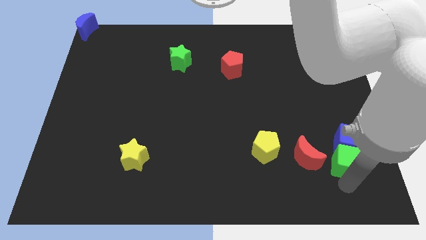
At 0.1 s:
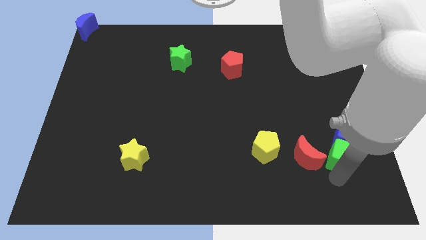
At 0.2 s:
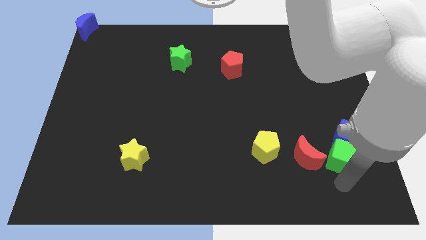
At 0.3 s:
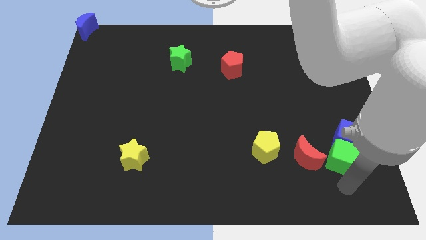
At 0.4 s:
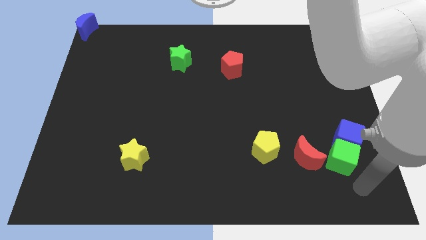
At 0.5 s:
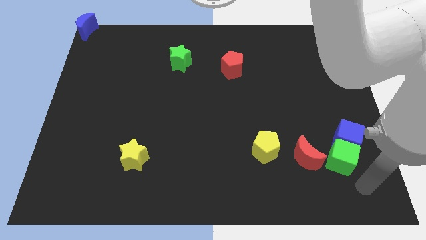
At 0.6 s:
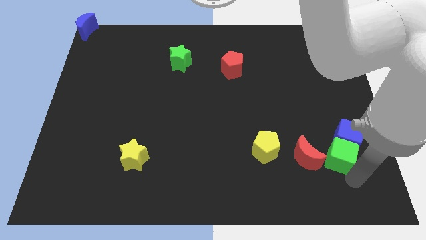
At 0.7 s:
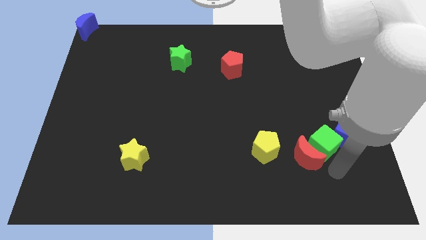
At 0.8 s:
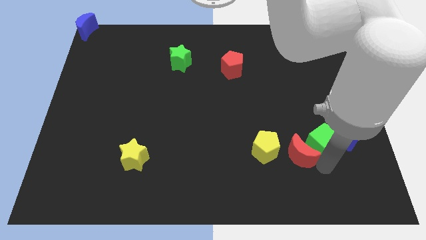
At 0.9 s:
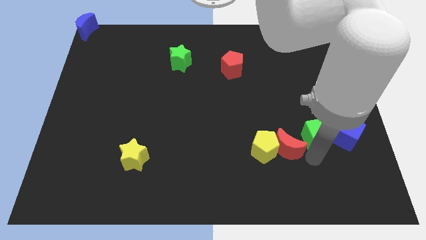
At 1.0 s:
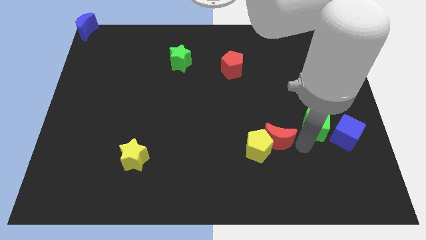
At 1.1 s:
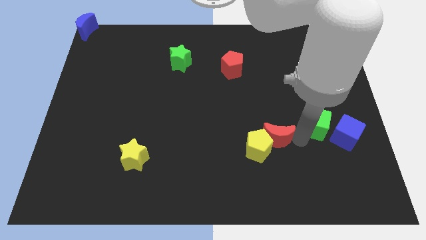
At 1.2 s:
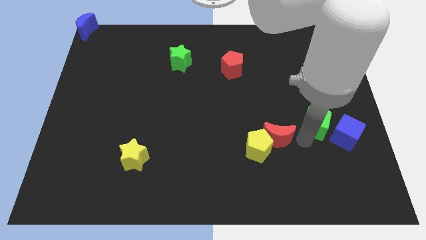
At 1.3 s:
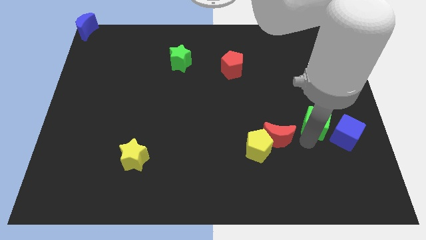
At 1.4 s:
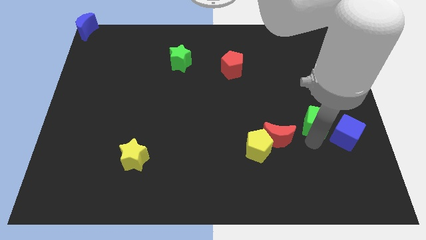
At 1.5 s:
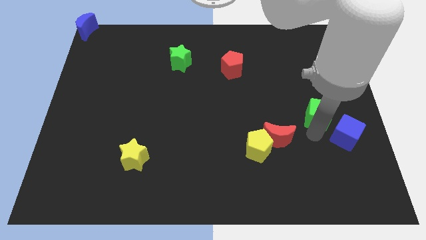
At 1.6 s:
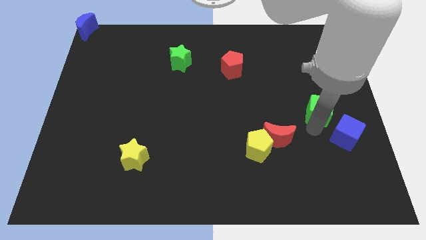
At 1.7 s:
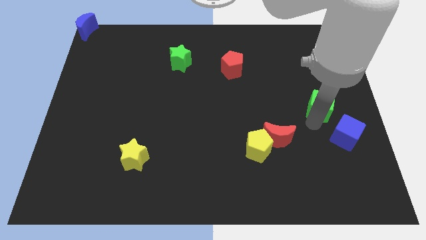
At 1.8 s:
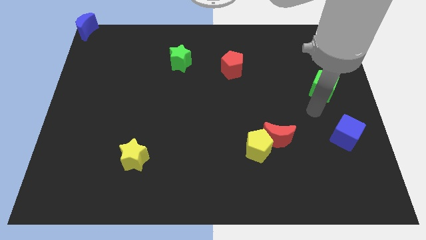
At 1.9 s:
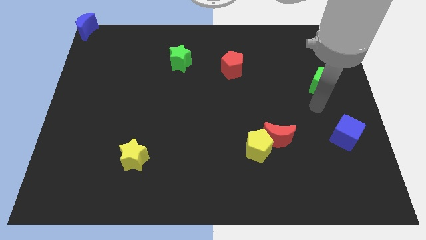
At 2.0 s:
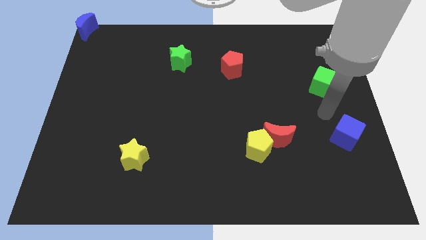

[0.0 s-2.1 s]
separate the green cube from the blue cube and red crescent

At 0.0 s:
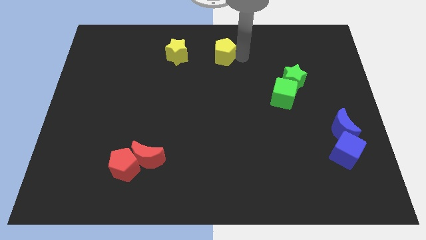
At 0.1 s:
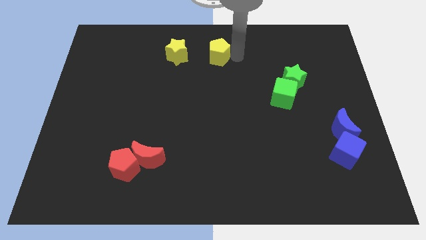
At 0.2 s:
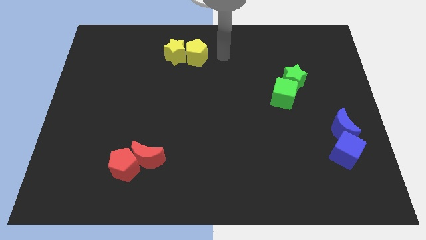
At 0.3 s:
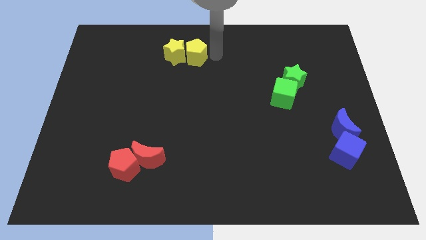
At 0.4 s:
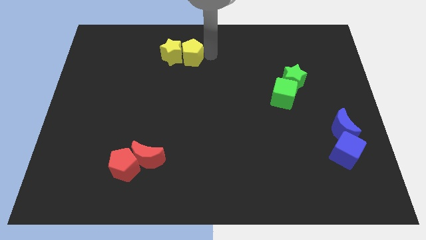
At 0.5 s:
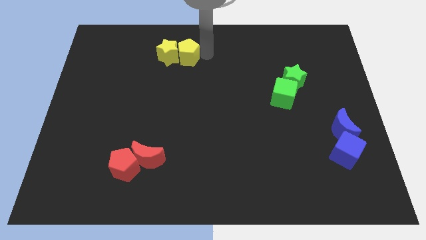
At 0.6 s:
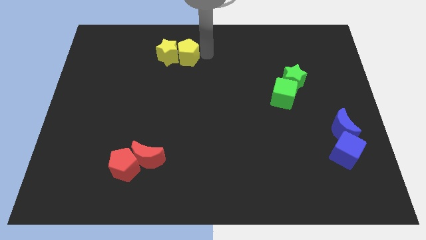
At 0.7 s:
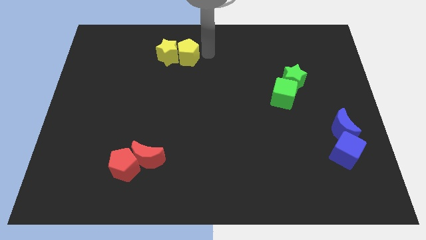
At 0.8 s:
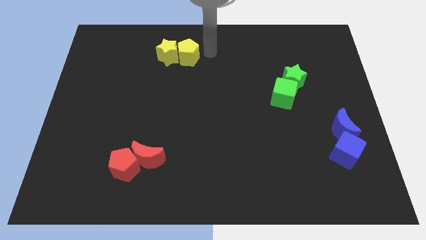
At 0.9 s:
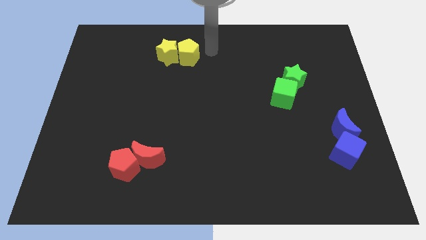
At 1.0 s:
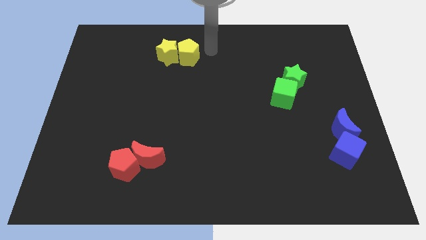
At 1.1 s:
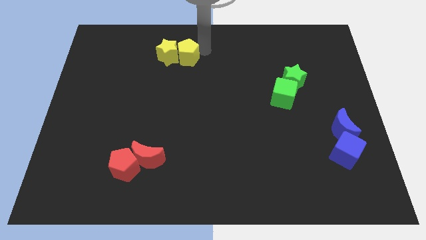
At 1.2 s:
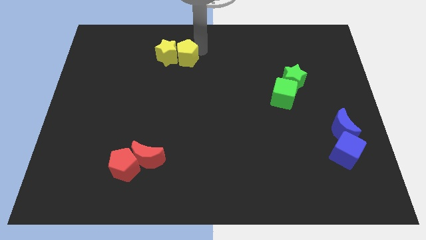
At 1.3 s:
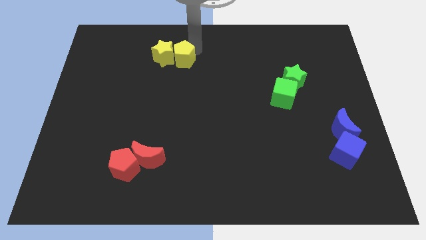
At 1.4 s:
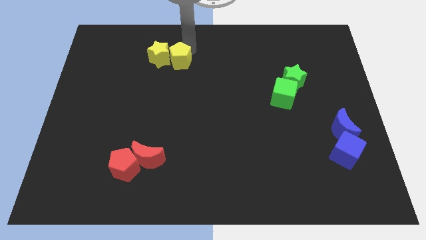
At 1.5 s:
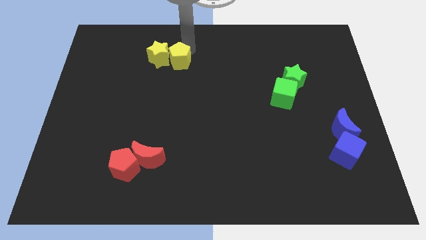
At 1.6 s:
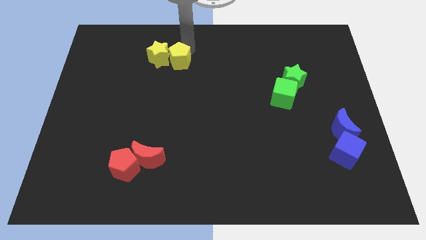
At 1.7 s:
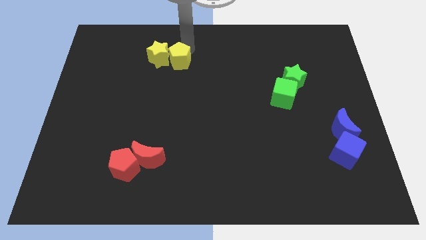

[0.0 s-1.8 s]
move the yellow pentagon into the yellow star

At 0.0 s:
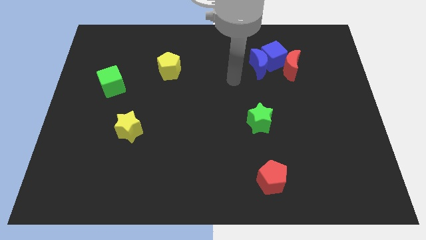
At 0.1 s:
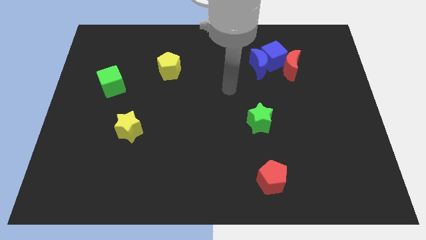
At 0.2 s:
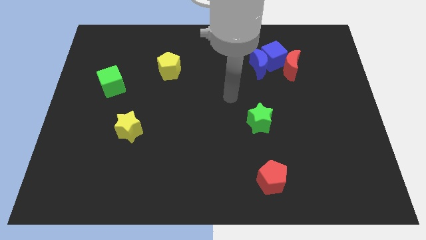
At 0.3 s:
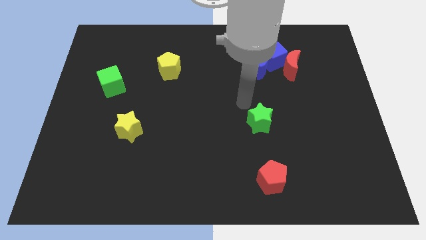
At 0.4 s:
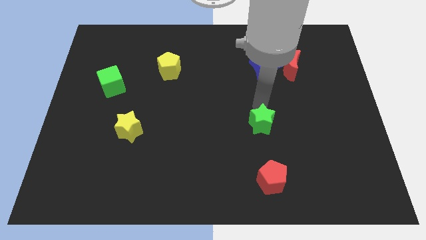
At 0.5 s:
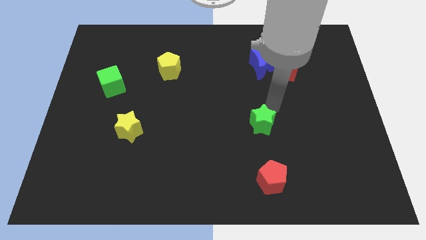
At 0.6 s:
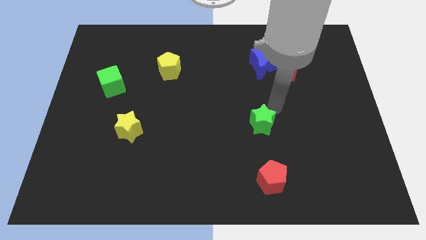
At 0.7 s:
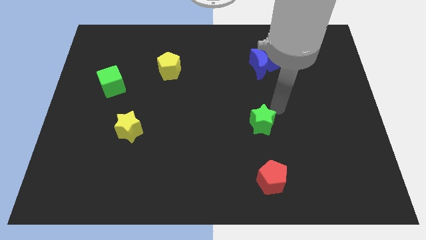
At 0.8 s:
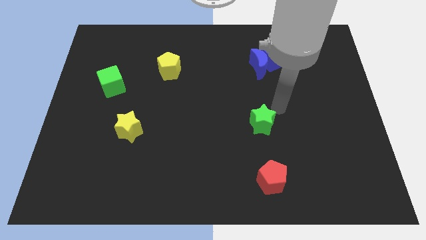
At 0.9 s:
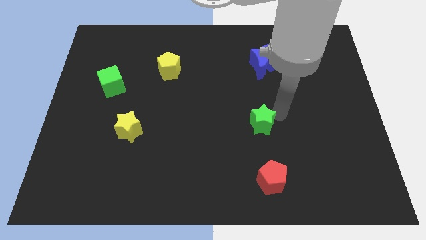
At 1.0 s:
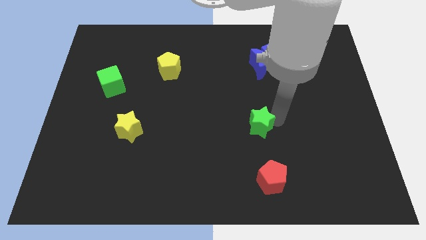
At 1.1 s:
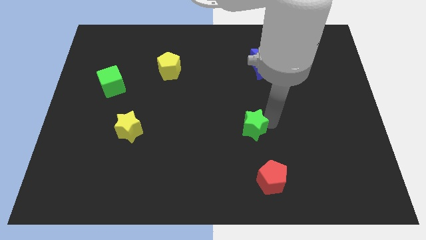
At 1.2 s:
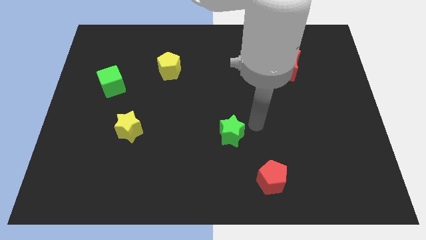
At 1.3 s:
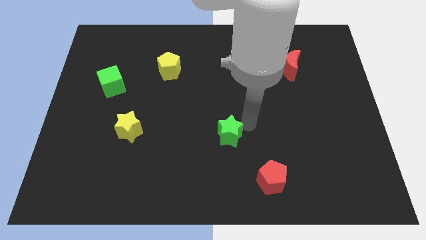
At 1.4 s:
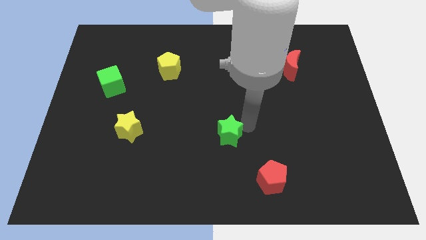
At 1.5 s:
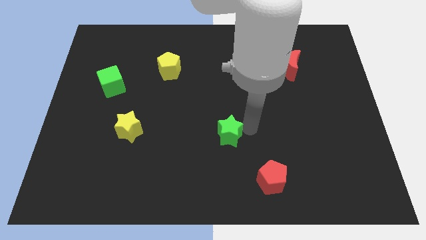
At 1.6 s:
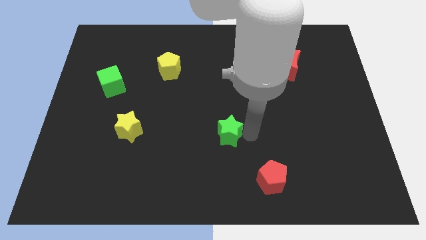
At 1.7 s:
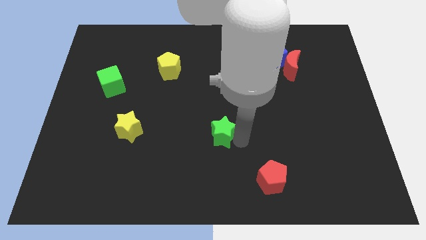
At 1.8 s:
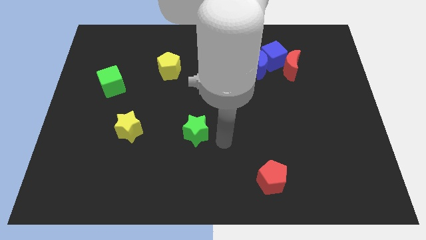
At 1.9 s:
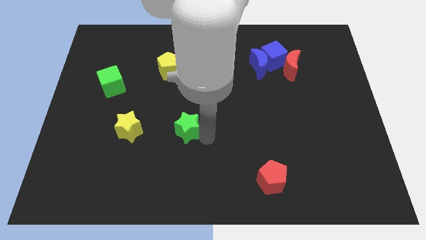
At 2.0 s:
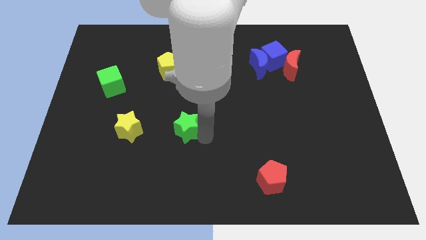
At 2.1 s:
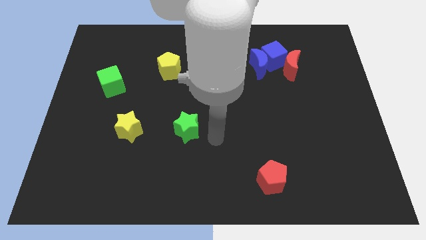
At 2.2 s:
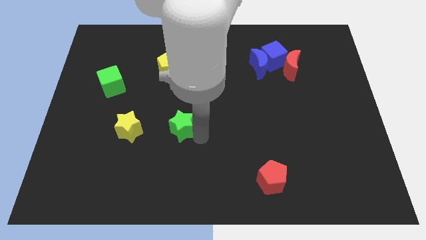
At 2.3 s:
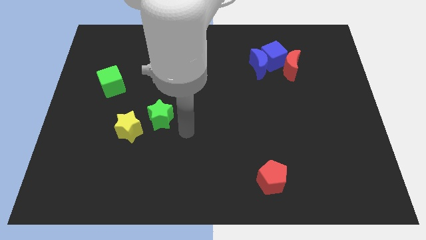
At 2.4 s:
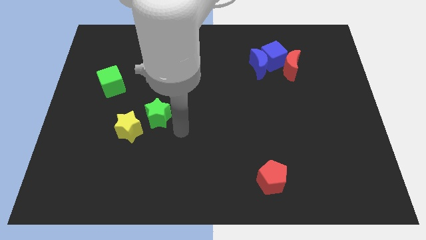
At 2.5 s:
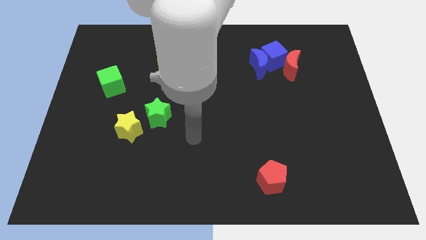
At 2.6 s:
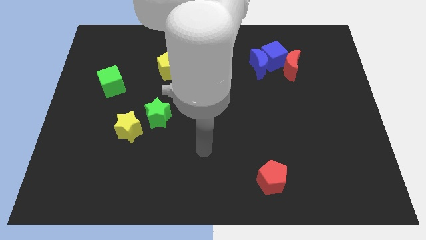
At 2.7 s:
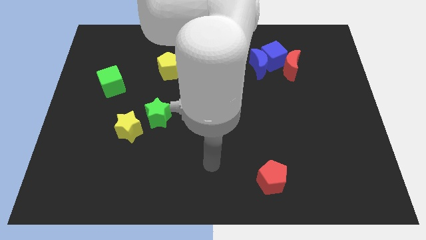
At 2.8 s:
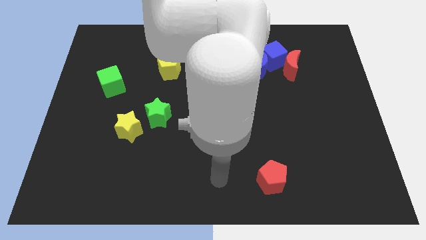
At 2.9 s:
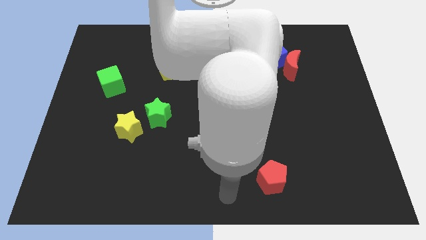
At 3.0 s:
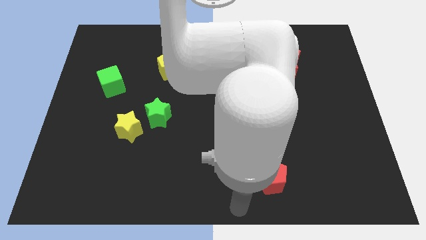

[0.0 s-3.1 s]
place the green star right to the yellow star

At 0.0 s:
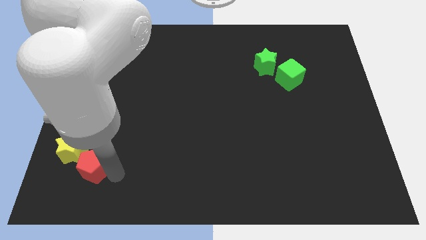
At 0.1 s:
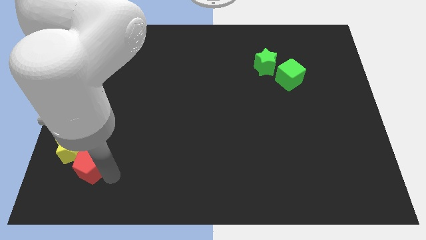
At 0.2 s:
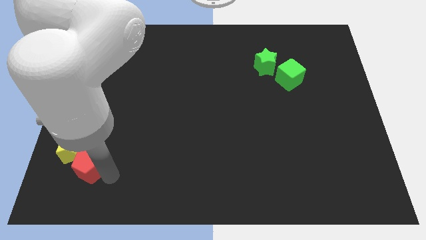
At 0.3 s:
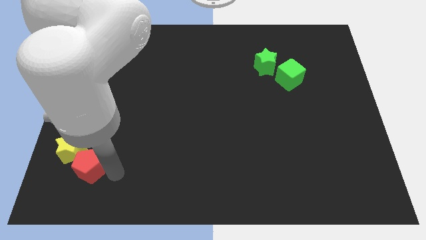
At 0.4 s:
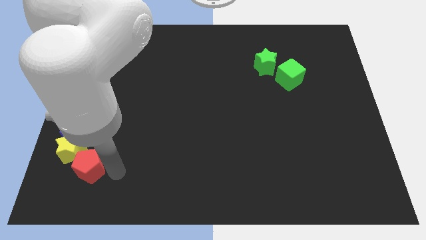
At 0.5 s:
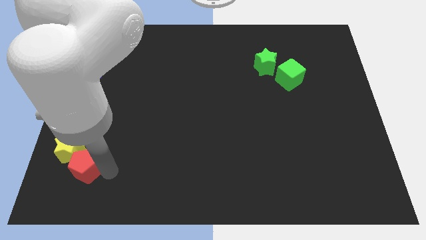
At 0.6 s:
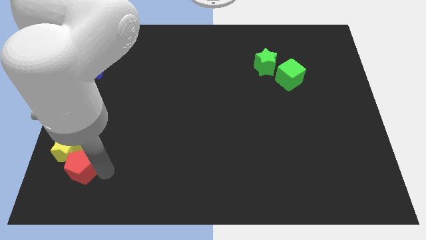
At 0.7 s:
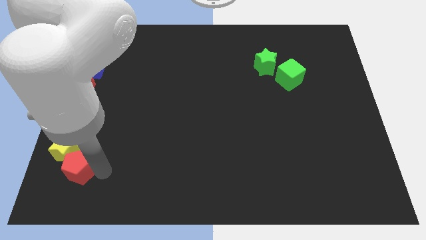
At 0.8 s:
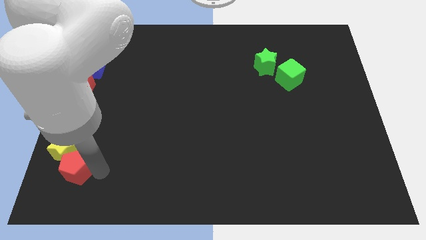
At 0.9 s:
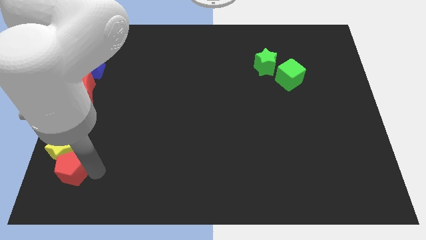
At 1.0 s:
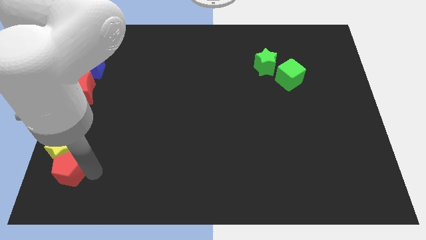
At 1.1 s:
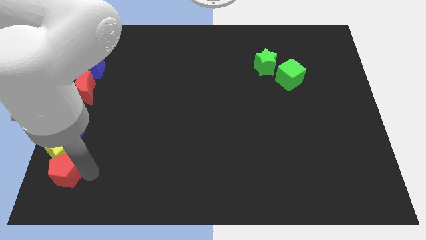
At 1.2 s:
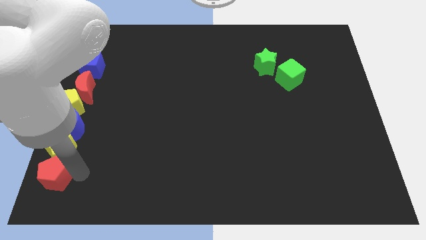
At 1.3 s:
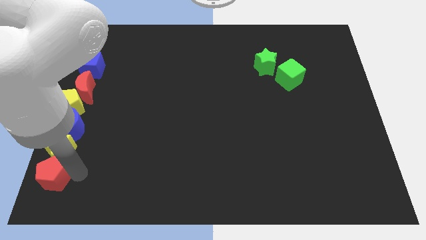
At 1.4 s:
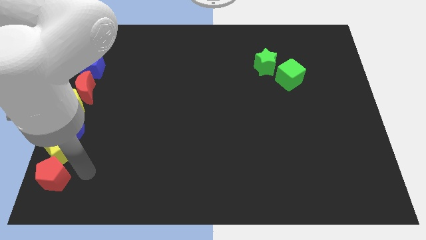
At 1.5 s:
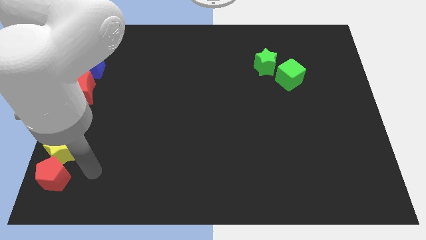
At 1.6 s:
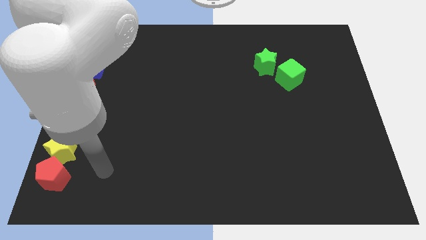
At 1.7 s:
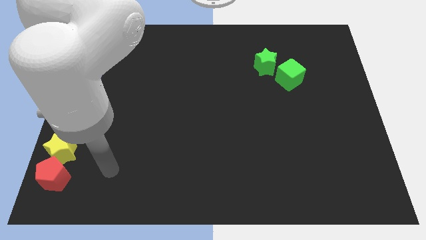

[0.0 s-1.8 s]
move the red pentagon to the bottom of the yellow star
